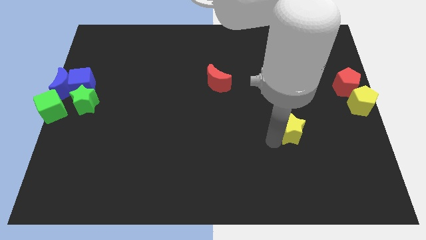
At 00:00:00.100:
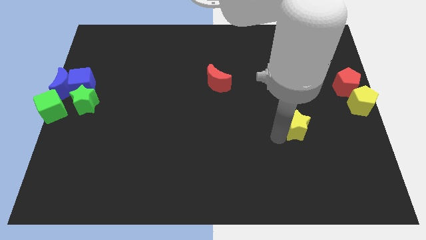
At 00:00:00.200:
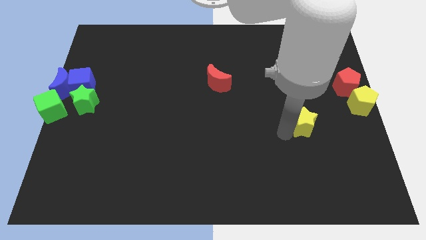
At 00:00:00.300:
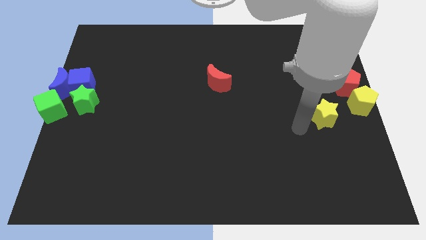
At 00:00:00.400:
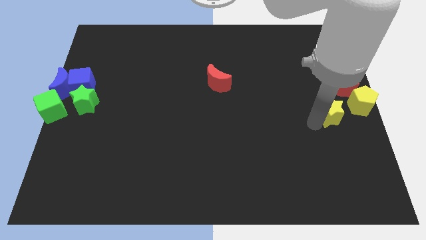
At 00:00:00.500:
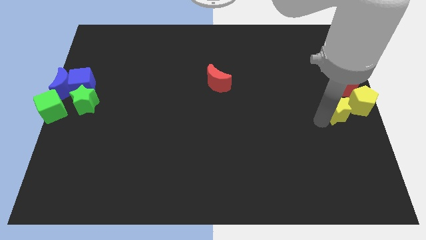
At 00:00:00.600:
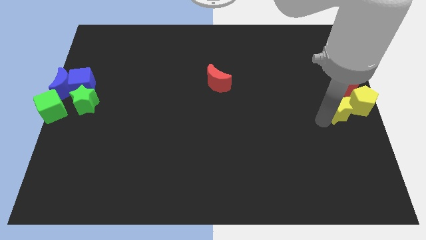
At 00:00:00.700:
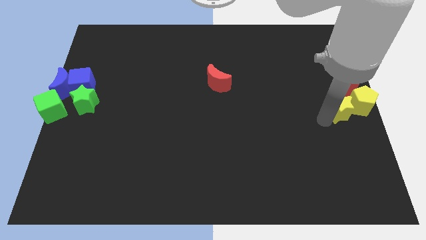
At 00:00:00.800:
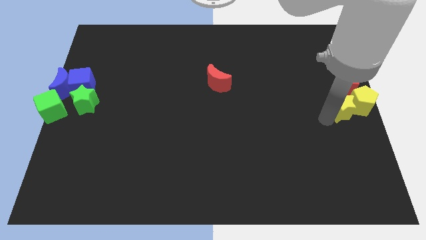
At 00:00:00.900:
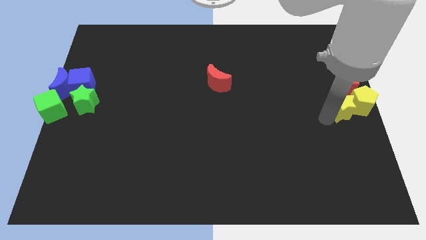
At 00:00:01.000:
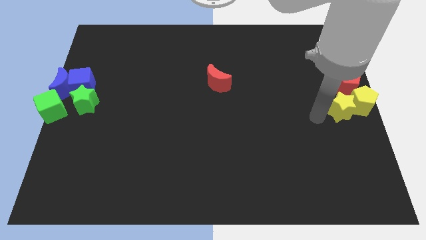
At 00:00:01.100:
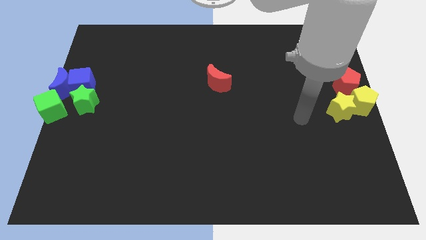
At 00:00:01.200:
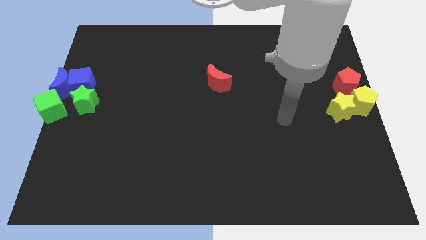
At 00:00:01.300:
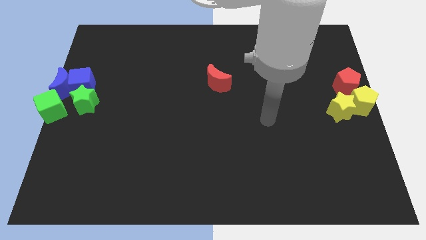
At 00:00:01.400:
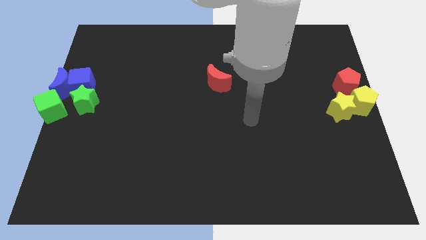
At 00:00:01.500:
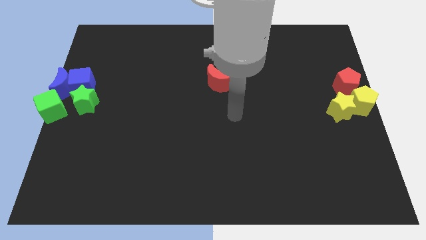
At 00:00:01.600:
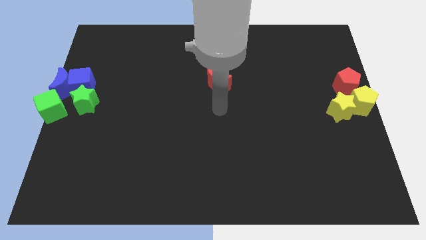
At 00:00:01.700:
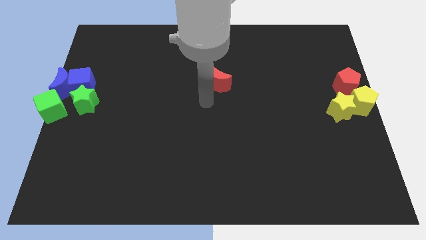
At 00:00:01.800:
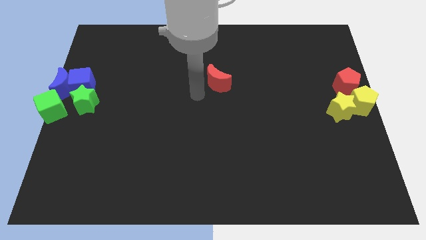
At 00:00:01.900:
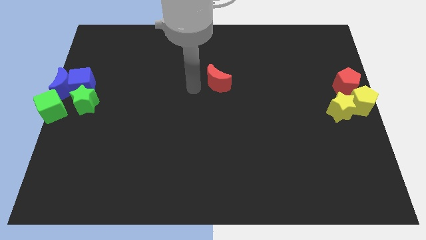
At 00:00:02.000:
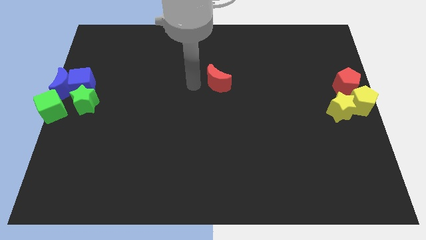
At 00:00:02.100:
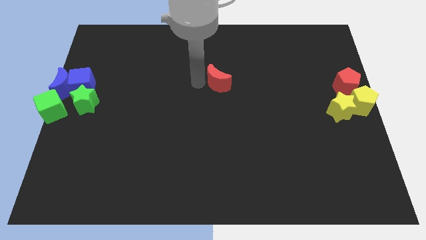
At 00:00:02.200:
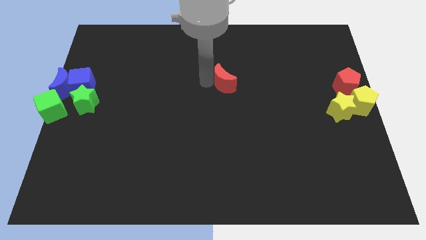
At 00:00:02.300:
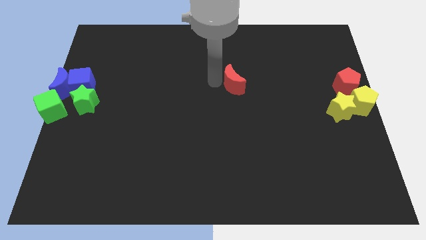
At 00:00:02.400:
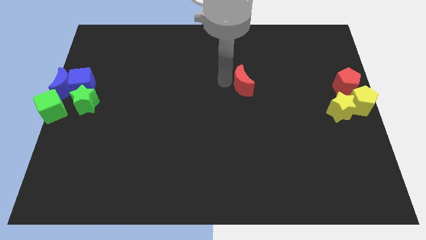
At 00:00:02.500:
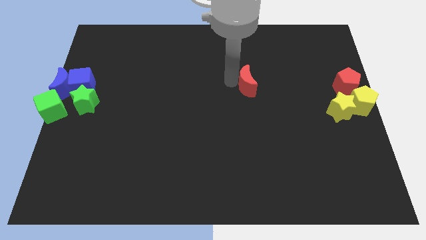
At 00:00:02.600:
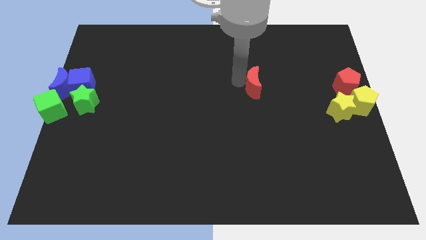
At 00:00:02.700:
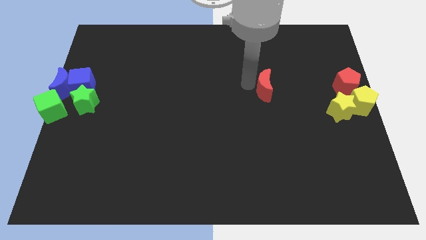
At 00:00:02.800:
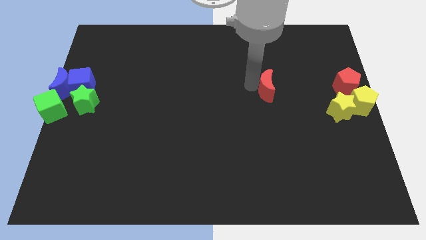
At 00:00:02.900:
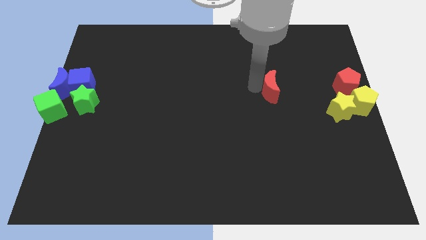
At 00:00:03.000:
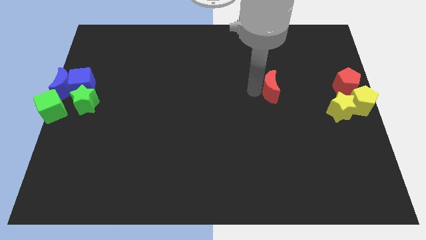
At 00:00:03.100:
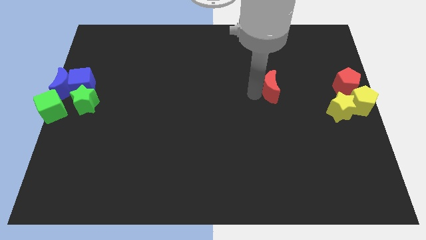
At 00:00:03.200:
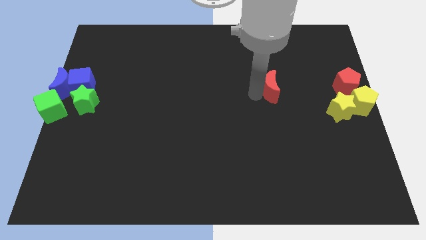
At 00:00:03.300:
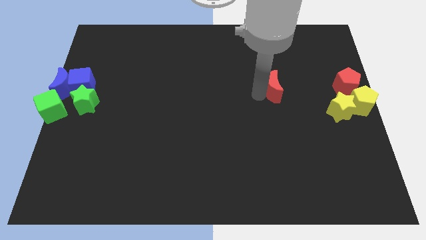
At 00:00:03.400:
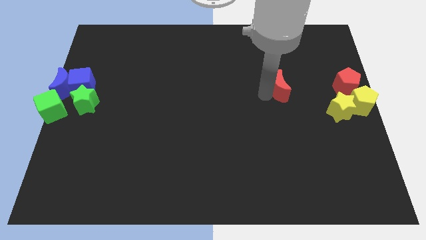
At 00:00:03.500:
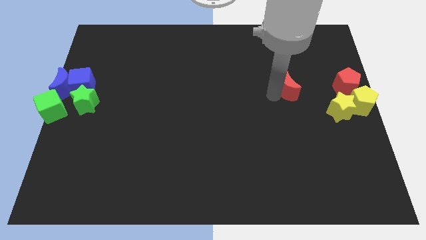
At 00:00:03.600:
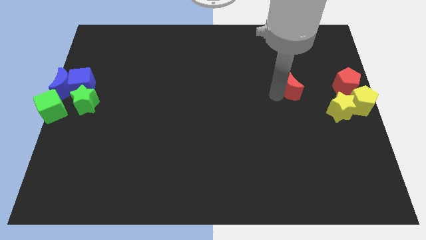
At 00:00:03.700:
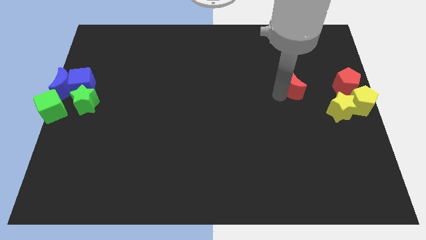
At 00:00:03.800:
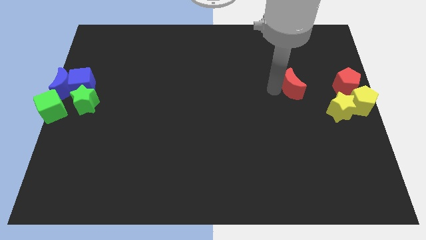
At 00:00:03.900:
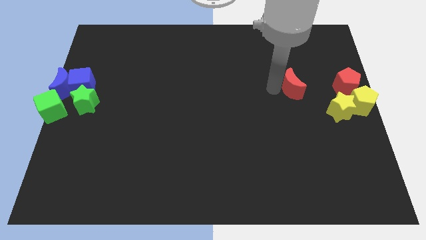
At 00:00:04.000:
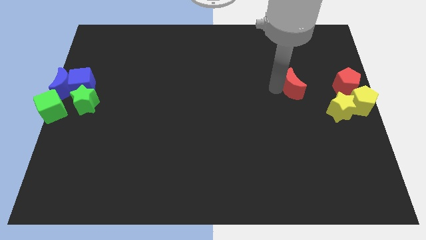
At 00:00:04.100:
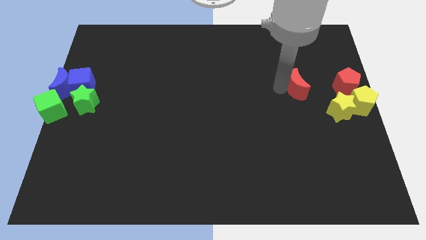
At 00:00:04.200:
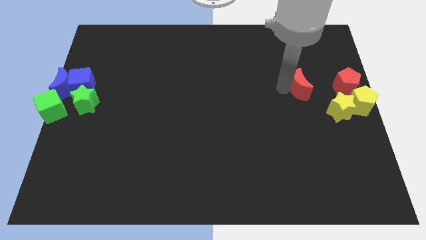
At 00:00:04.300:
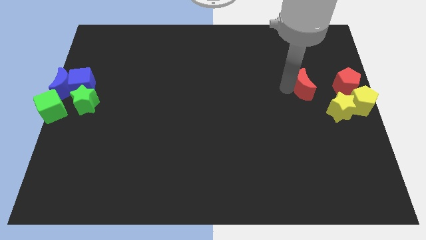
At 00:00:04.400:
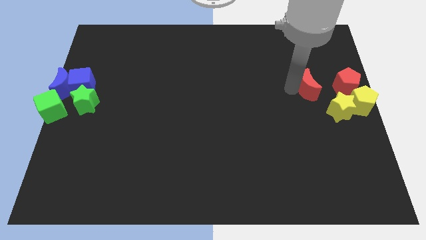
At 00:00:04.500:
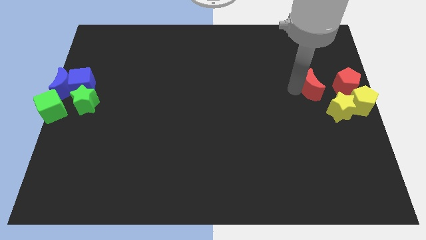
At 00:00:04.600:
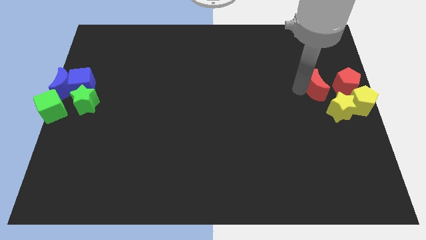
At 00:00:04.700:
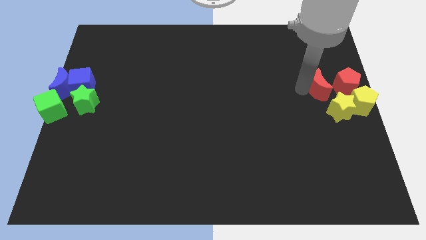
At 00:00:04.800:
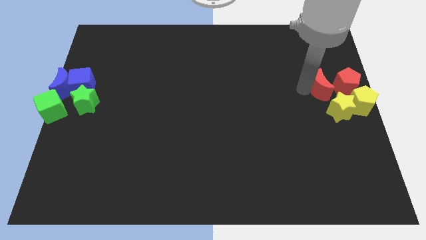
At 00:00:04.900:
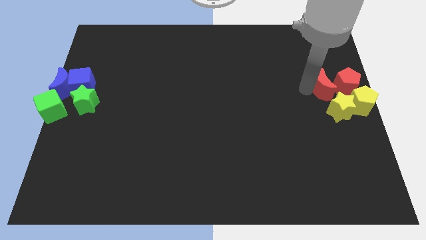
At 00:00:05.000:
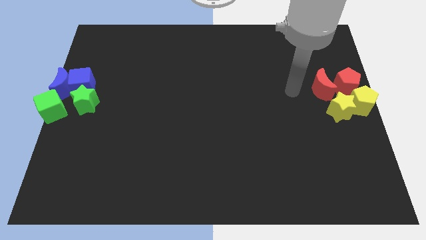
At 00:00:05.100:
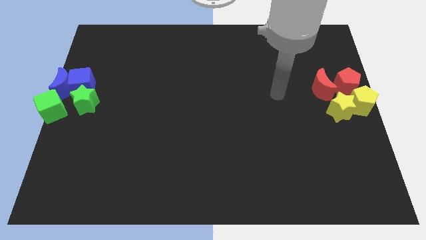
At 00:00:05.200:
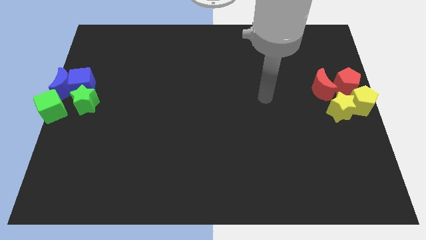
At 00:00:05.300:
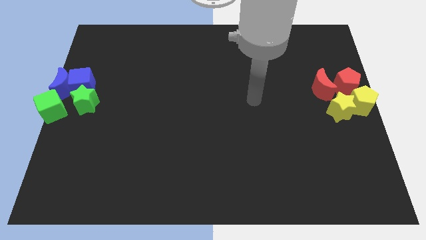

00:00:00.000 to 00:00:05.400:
push the red moon and yellow star into the group of blocks

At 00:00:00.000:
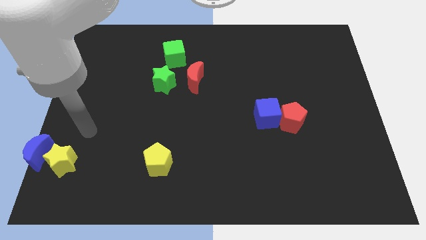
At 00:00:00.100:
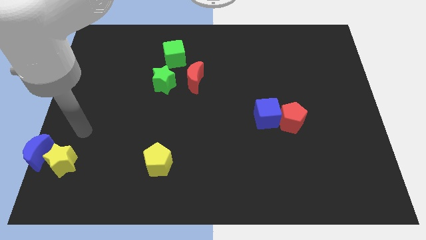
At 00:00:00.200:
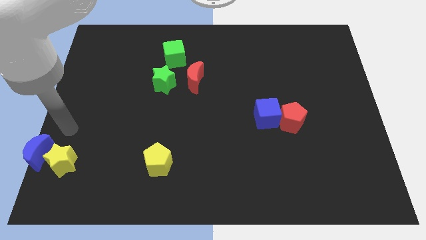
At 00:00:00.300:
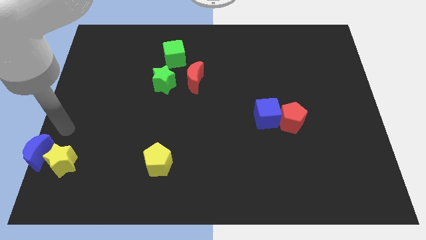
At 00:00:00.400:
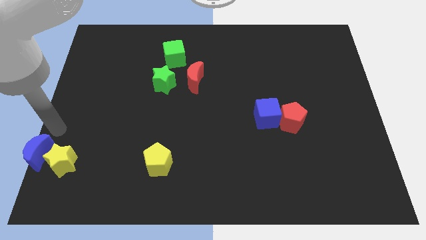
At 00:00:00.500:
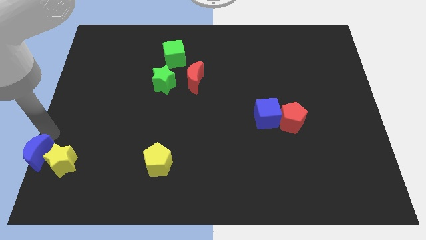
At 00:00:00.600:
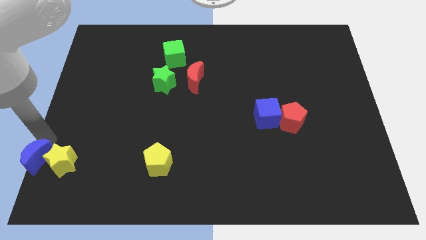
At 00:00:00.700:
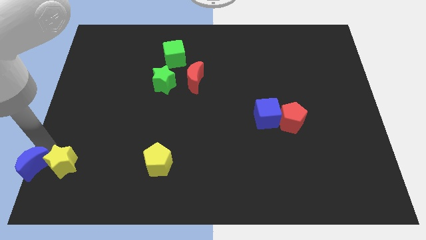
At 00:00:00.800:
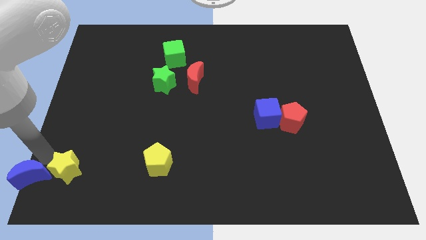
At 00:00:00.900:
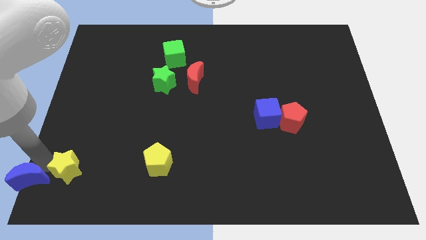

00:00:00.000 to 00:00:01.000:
move blue moon slightly down

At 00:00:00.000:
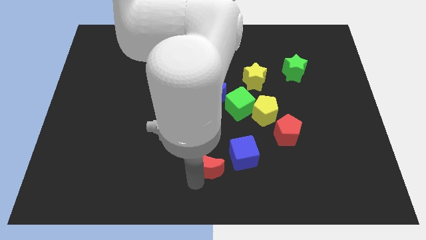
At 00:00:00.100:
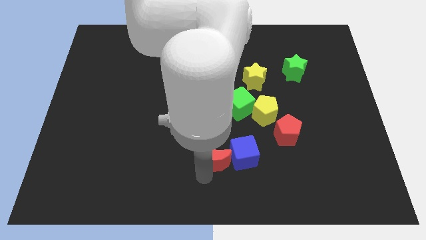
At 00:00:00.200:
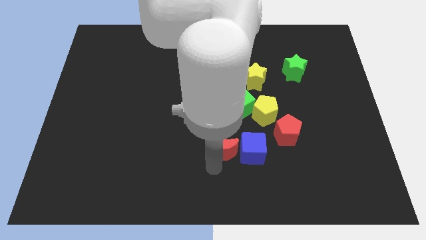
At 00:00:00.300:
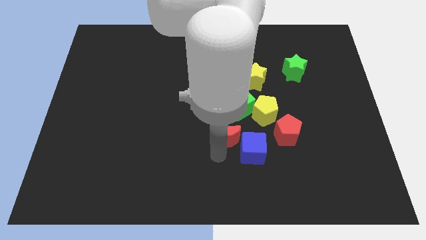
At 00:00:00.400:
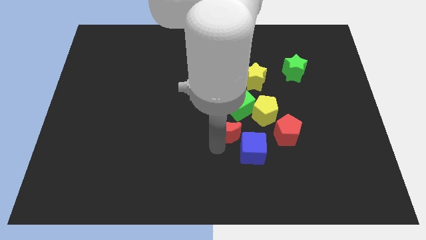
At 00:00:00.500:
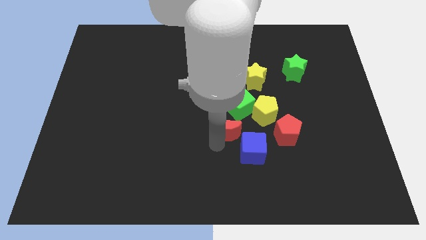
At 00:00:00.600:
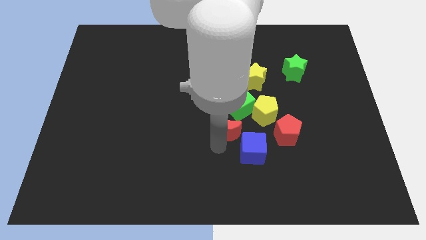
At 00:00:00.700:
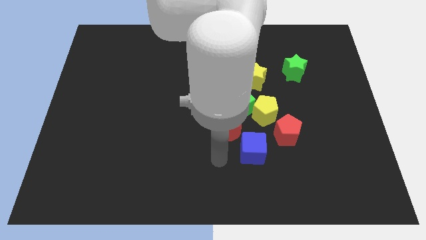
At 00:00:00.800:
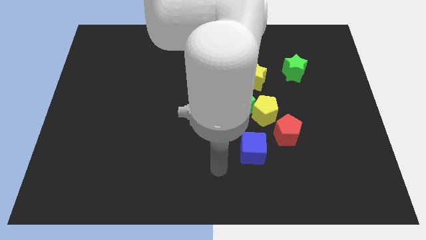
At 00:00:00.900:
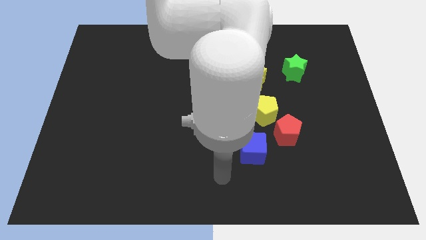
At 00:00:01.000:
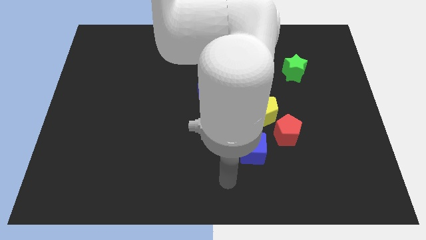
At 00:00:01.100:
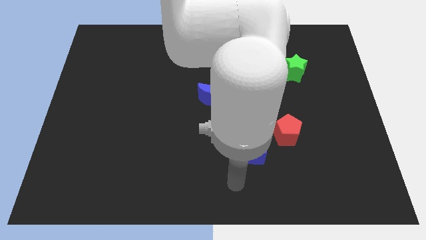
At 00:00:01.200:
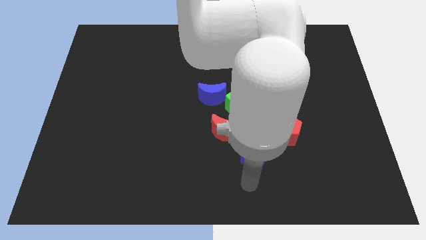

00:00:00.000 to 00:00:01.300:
move the red moon under the green cube

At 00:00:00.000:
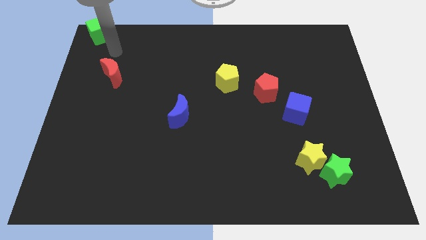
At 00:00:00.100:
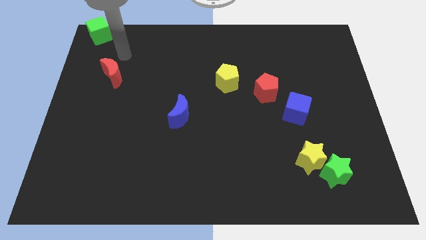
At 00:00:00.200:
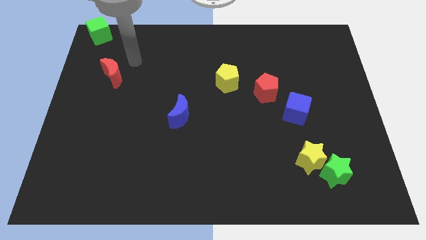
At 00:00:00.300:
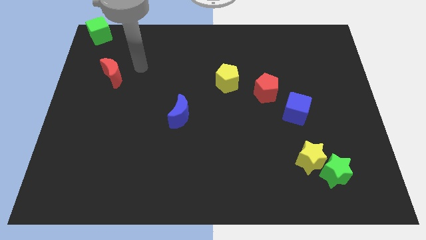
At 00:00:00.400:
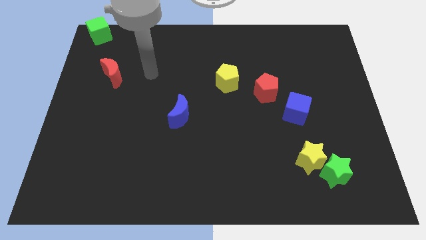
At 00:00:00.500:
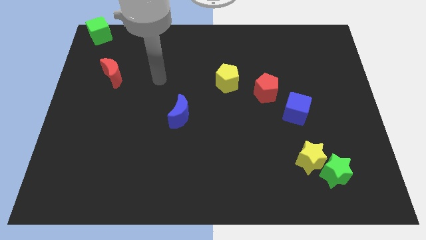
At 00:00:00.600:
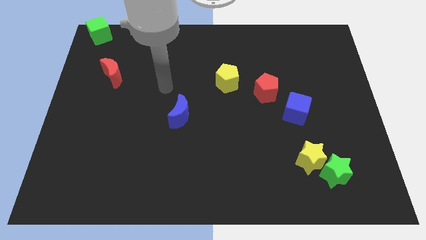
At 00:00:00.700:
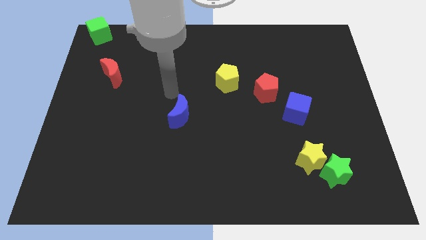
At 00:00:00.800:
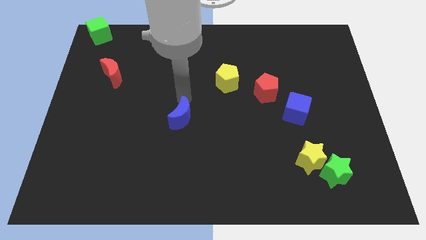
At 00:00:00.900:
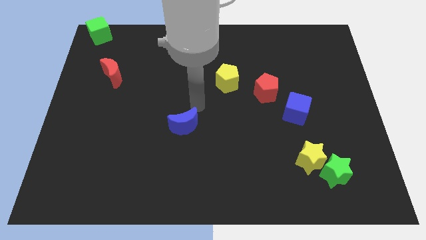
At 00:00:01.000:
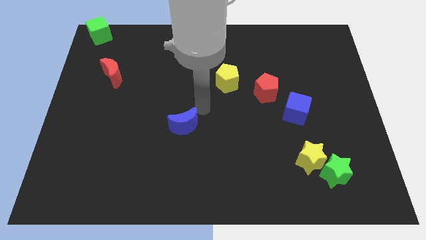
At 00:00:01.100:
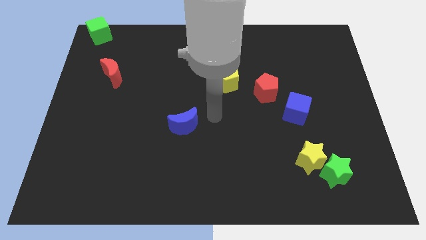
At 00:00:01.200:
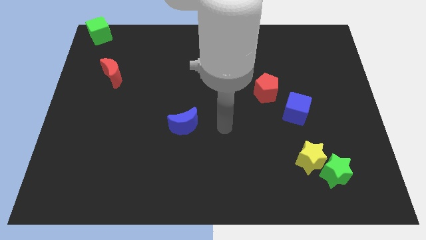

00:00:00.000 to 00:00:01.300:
slightly push the blue crescent downwards
